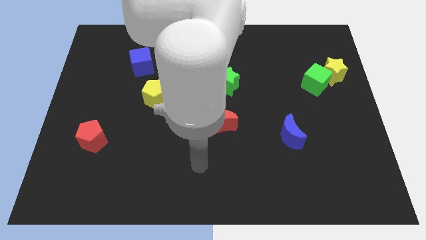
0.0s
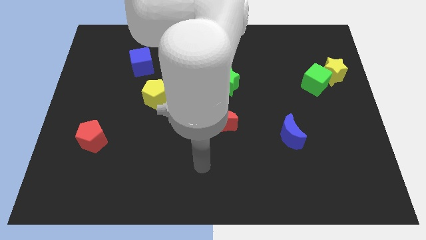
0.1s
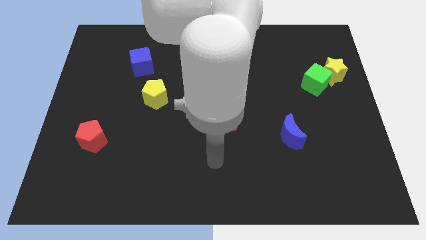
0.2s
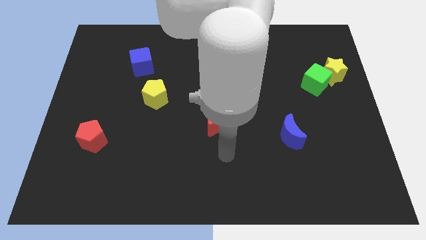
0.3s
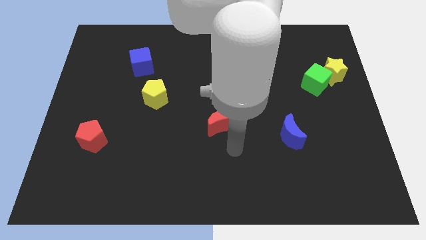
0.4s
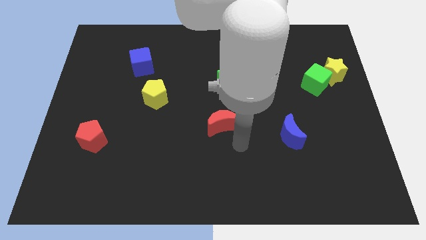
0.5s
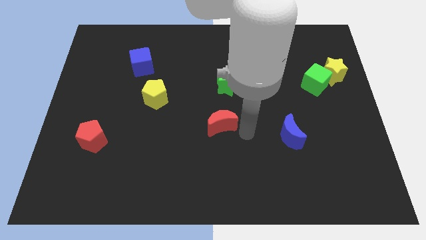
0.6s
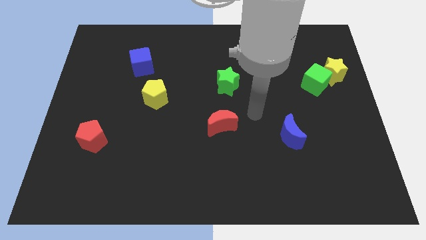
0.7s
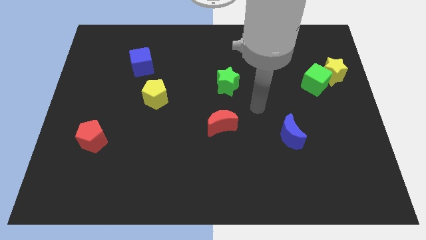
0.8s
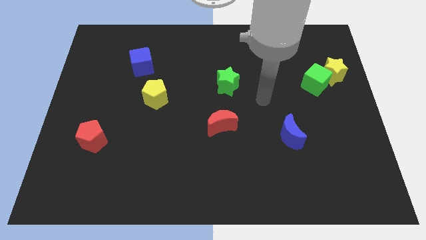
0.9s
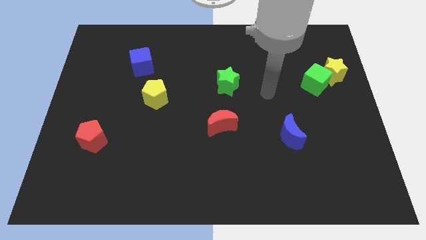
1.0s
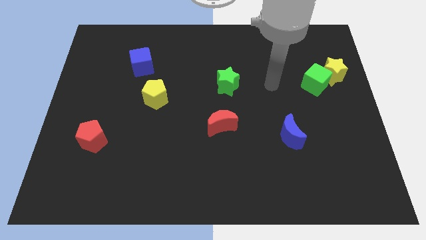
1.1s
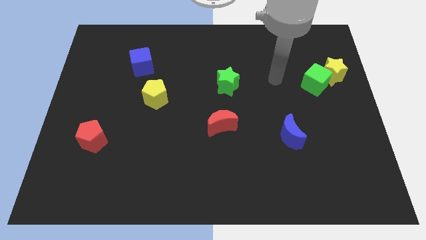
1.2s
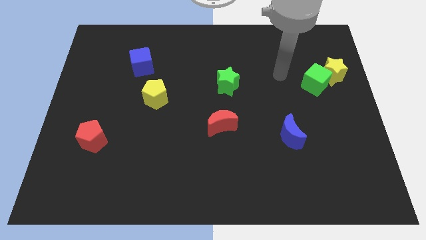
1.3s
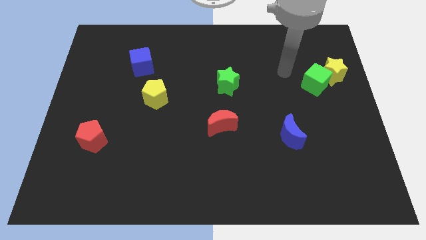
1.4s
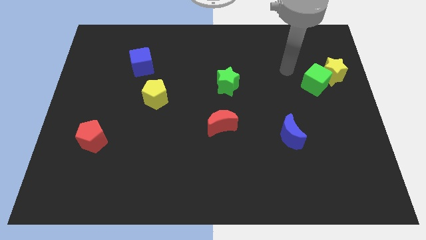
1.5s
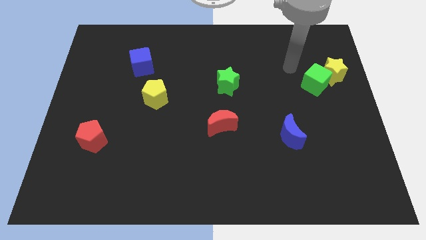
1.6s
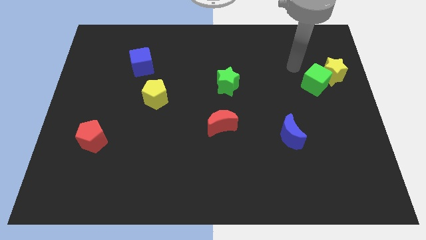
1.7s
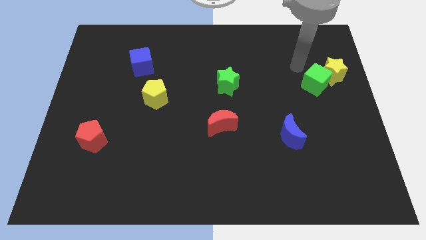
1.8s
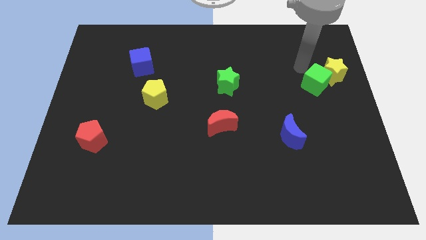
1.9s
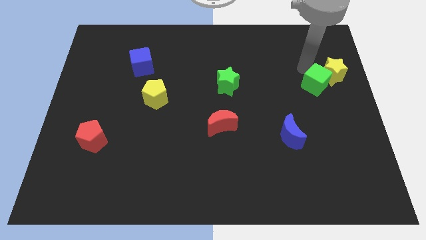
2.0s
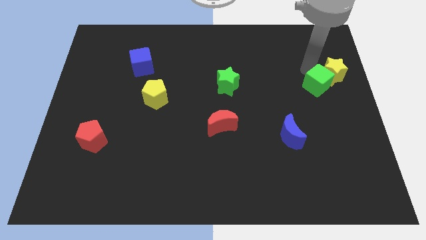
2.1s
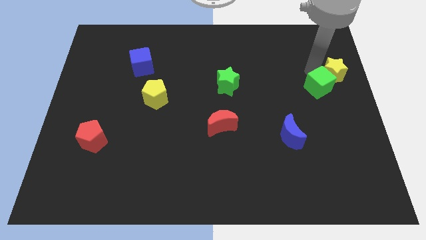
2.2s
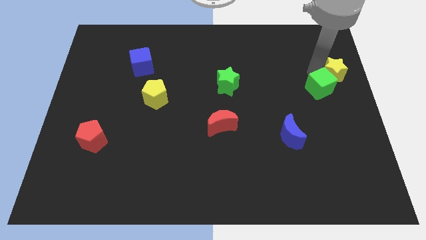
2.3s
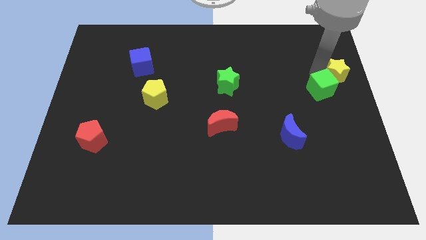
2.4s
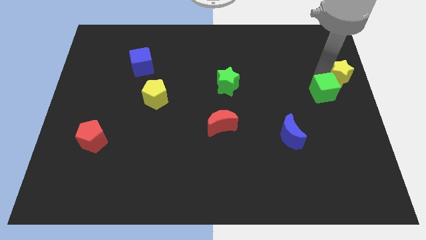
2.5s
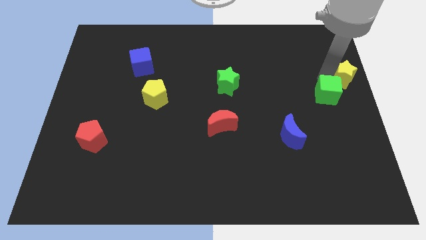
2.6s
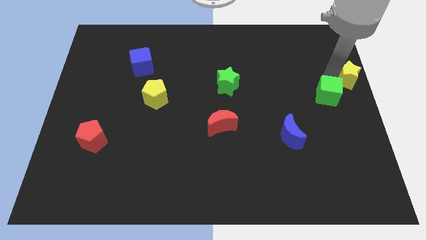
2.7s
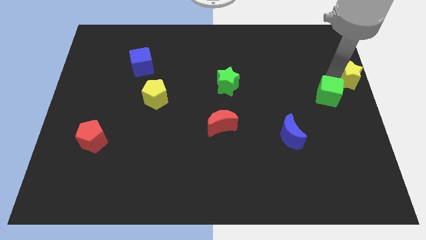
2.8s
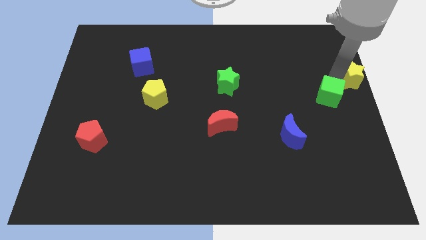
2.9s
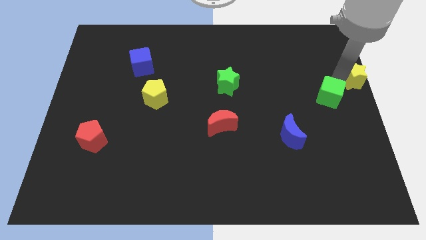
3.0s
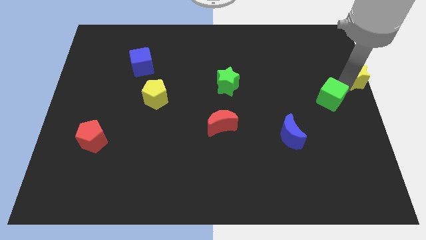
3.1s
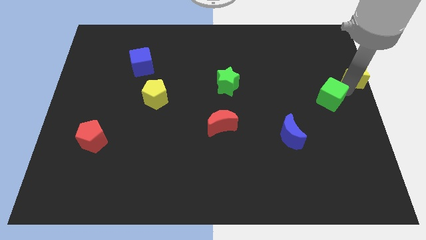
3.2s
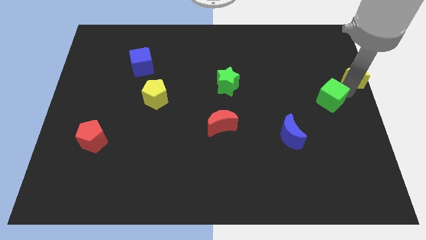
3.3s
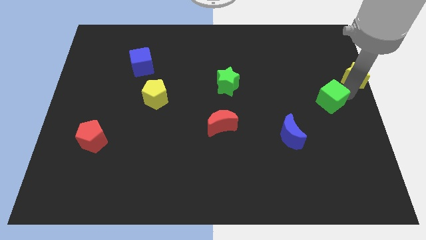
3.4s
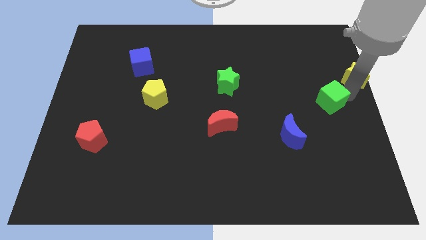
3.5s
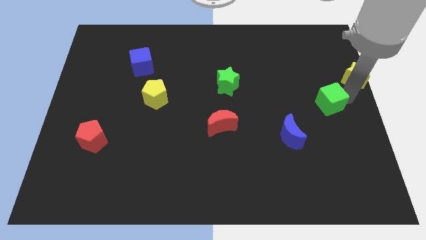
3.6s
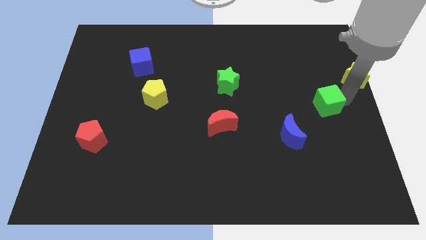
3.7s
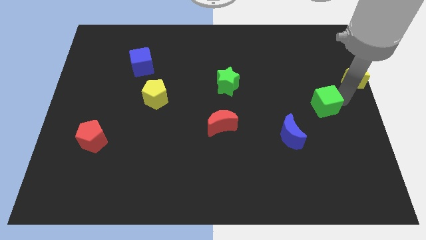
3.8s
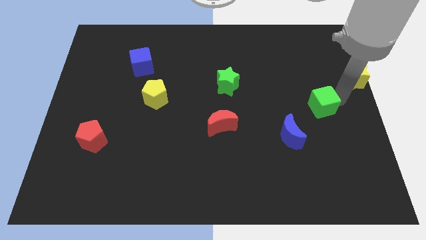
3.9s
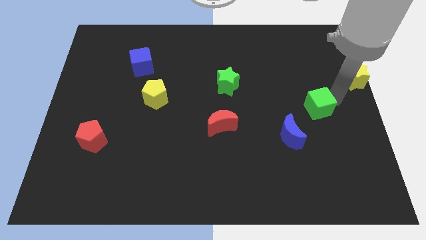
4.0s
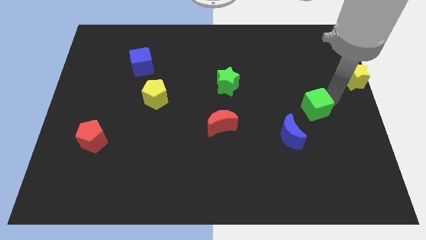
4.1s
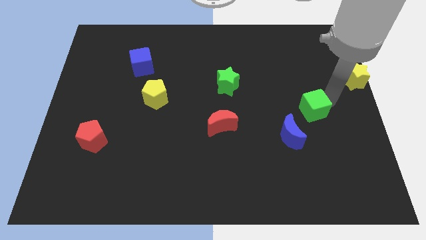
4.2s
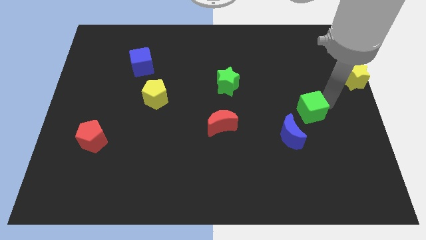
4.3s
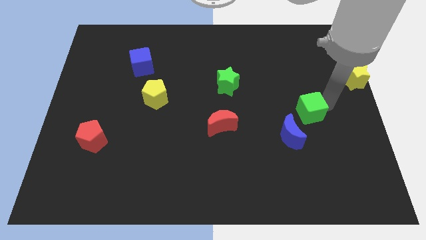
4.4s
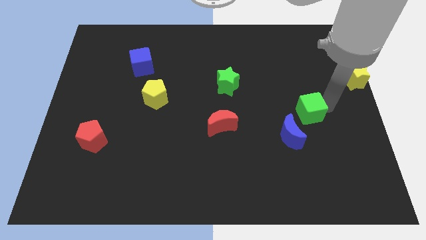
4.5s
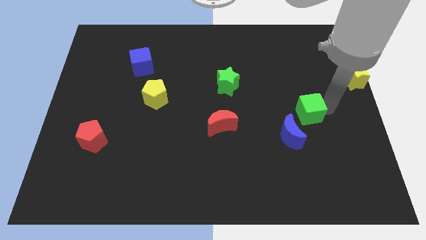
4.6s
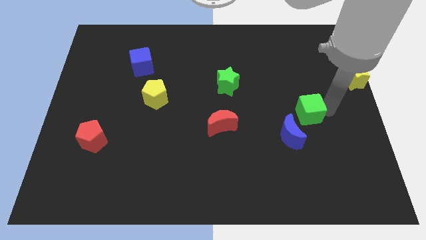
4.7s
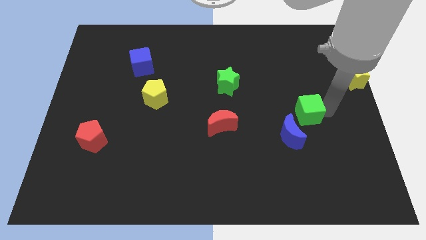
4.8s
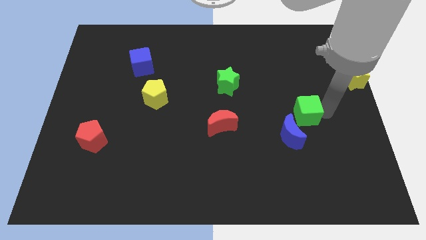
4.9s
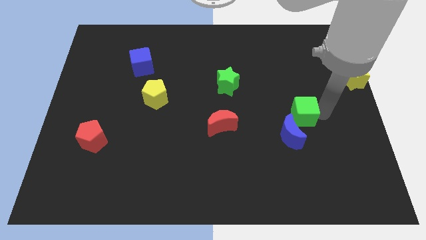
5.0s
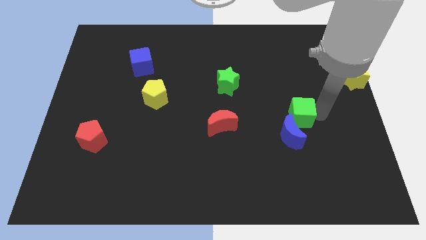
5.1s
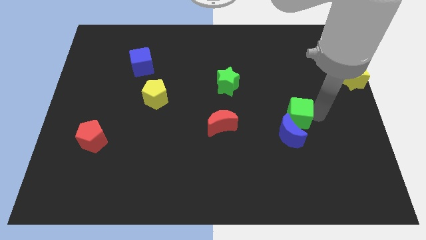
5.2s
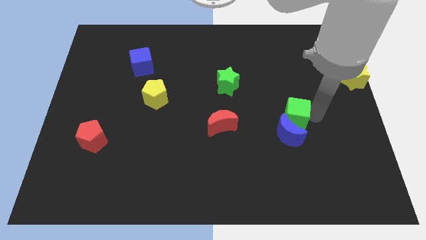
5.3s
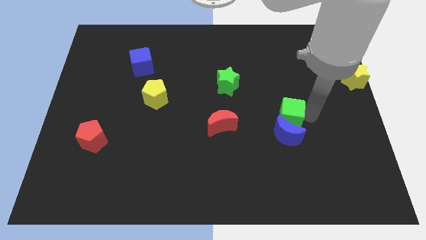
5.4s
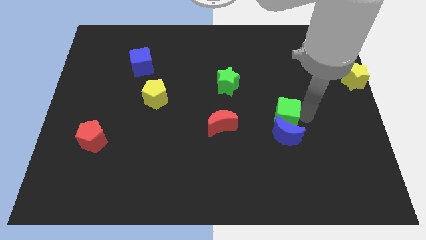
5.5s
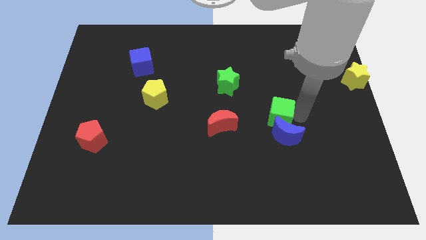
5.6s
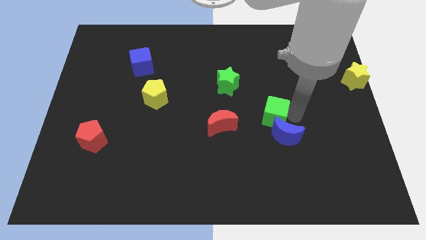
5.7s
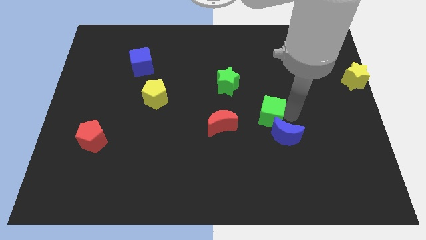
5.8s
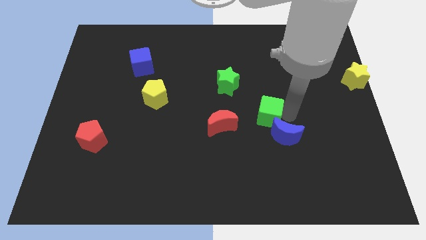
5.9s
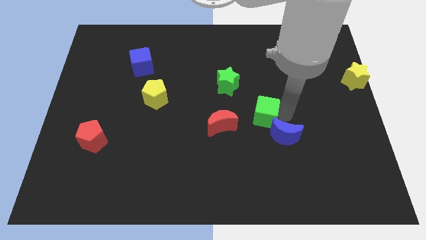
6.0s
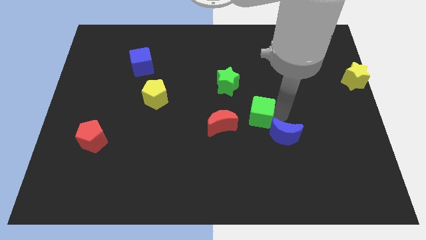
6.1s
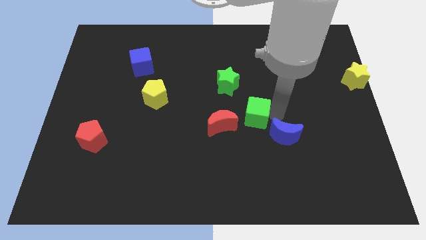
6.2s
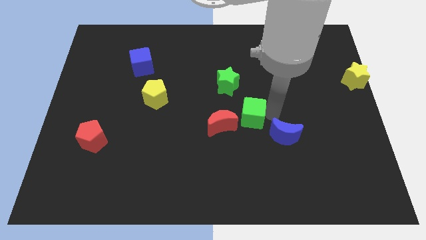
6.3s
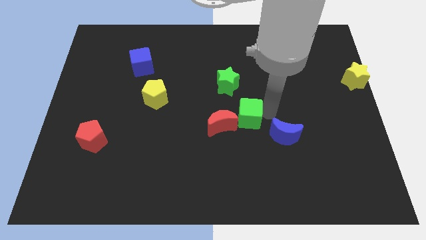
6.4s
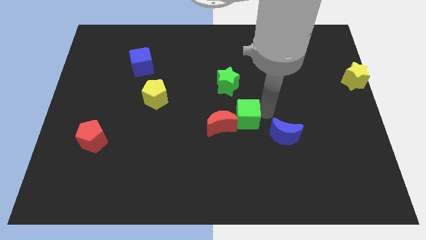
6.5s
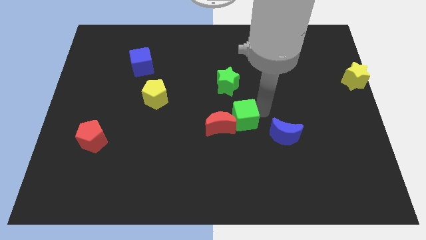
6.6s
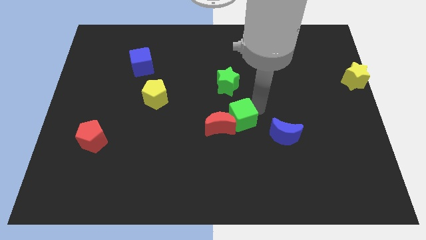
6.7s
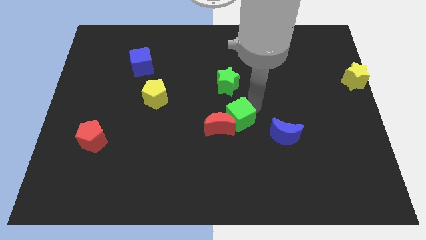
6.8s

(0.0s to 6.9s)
move the green cube next to the red moon

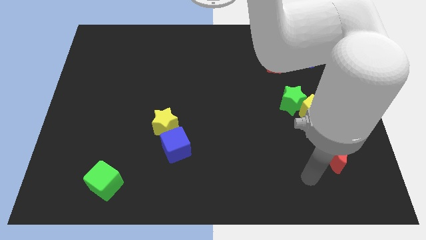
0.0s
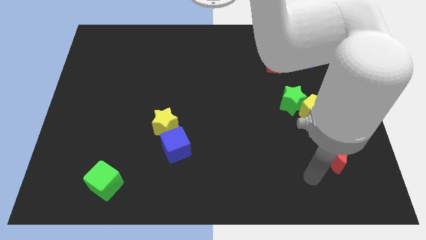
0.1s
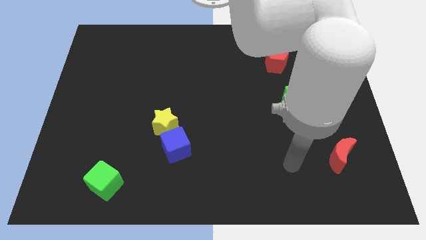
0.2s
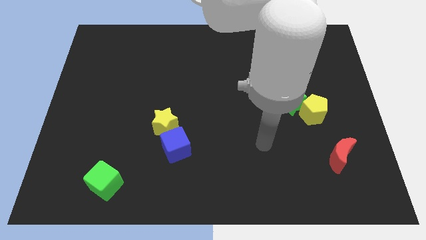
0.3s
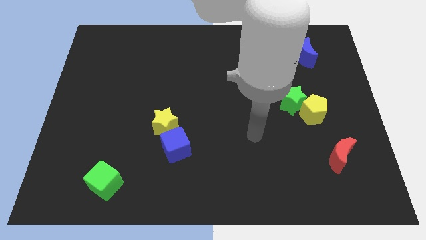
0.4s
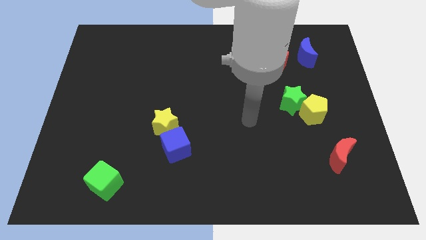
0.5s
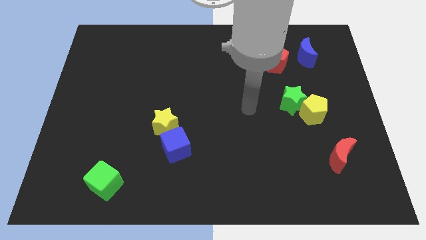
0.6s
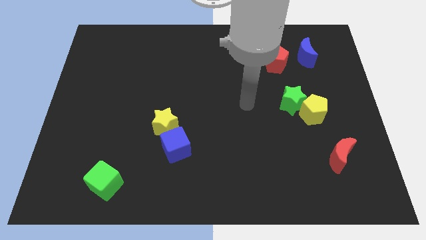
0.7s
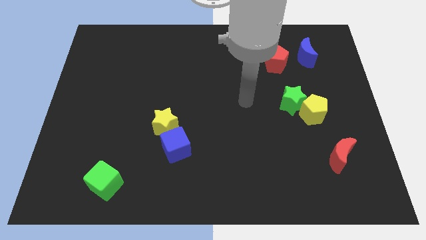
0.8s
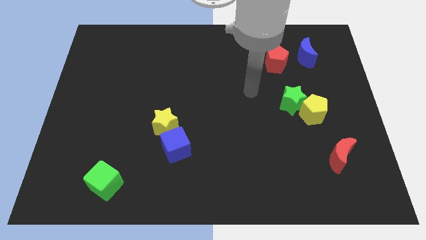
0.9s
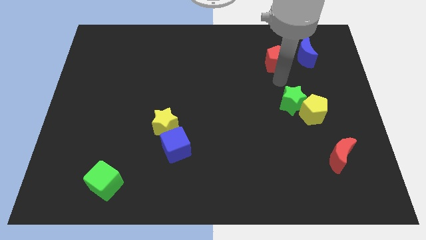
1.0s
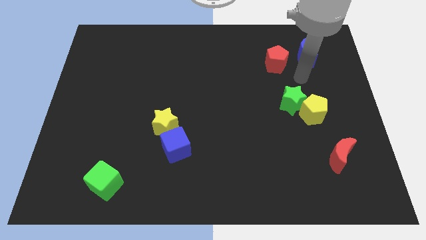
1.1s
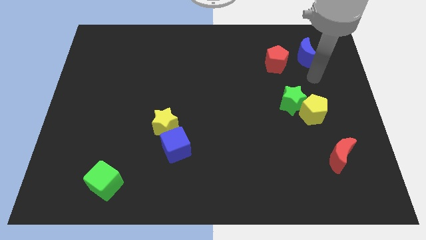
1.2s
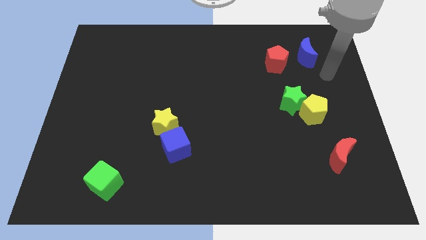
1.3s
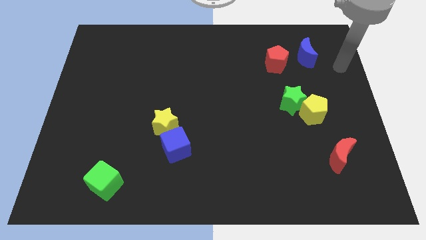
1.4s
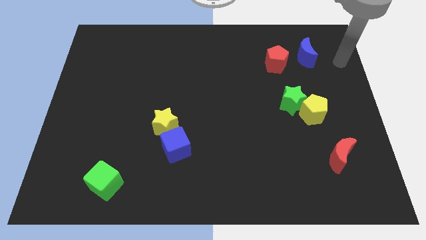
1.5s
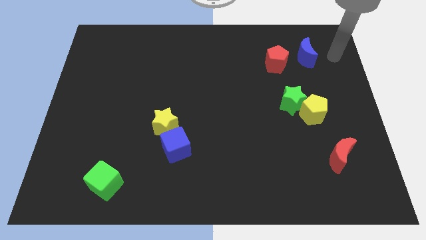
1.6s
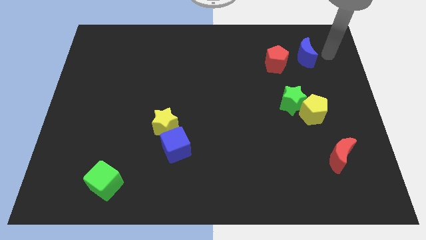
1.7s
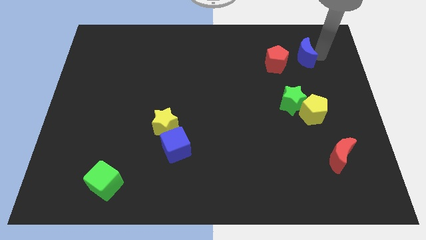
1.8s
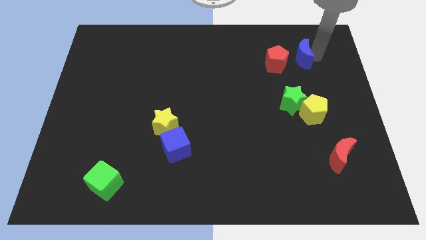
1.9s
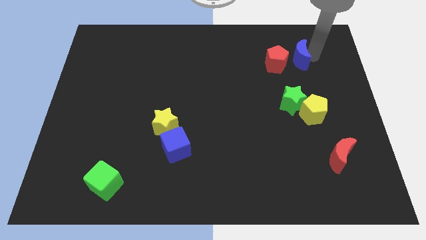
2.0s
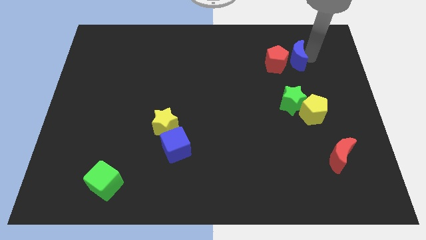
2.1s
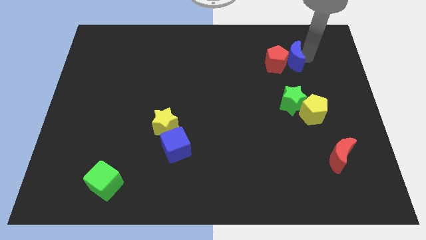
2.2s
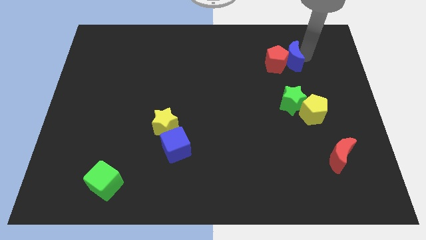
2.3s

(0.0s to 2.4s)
put the blue moon close to the red pentagon
